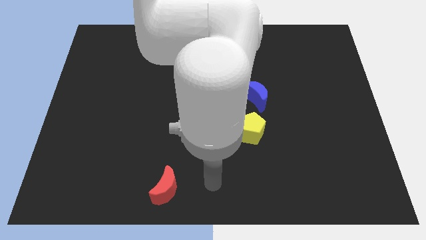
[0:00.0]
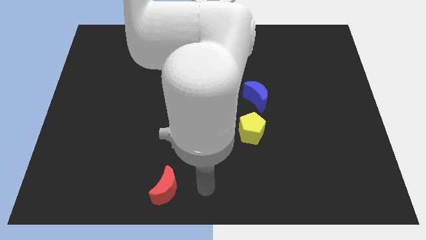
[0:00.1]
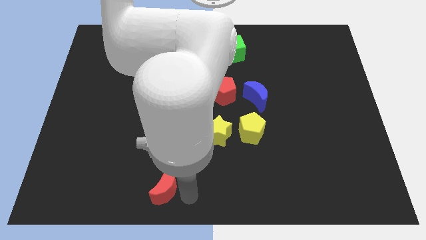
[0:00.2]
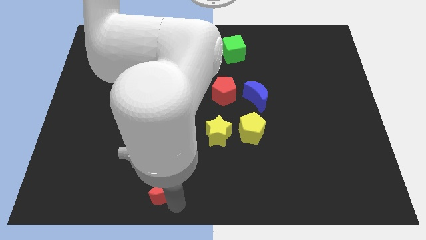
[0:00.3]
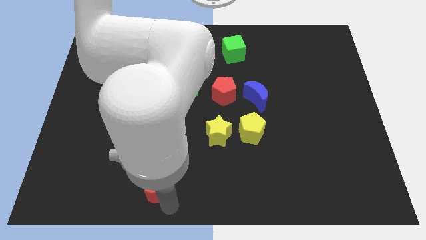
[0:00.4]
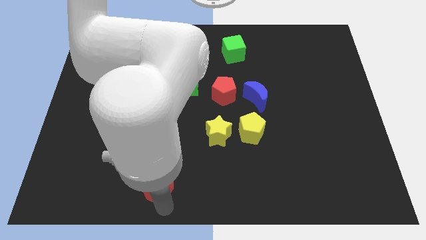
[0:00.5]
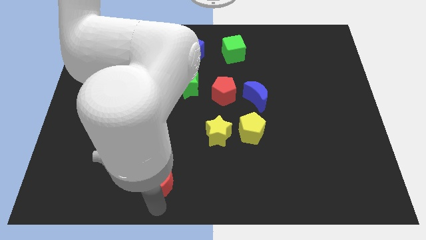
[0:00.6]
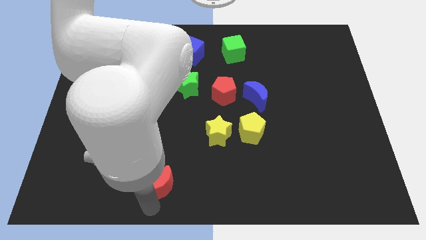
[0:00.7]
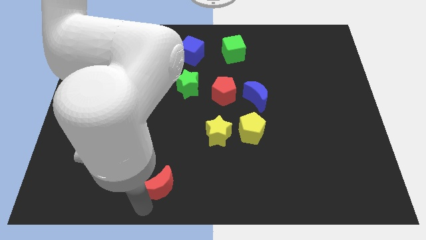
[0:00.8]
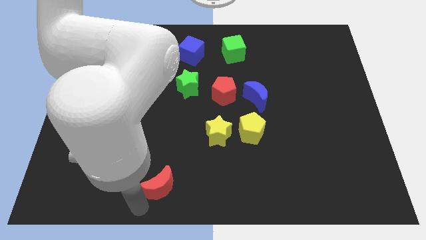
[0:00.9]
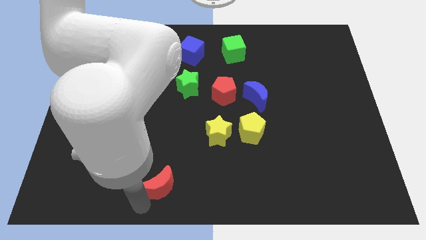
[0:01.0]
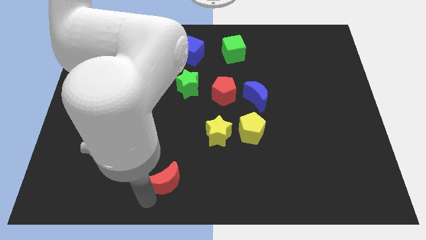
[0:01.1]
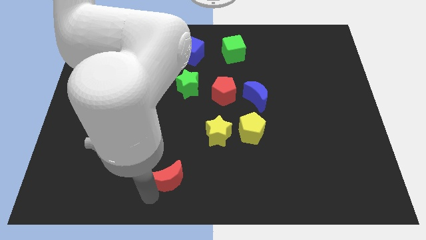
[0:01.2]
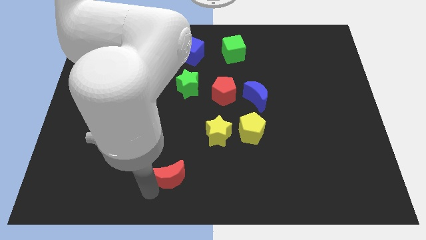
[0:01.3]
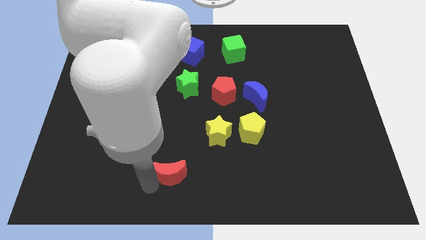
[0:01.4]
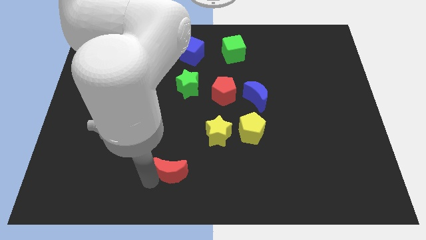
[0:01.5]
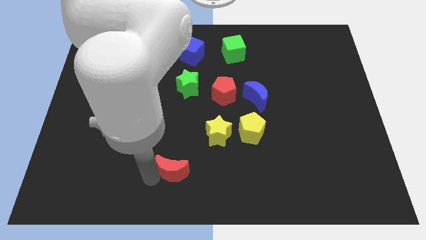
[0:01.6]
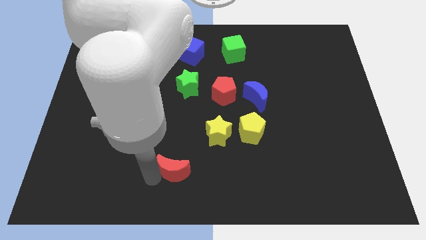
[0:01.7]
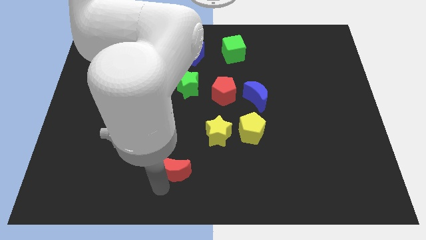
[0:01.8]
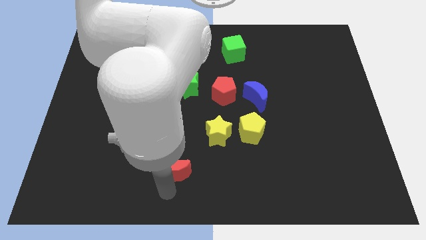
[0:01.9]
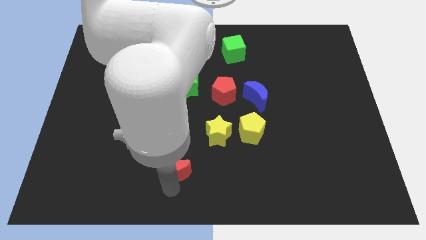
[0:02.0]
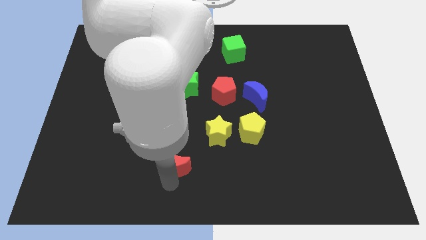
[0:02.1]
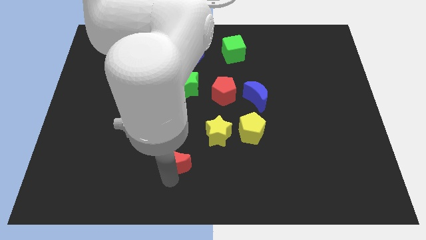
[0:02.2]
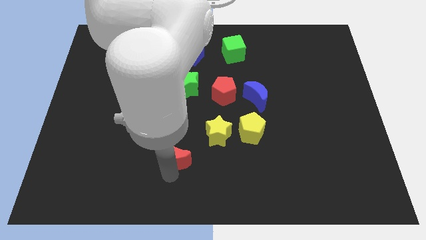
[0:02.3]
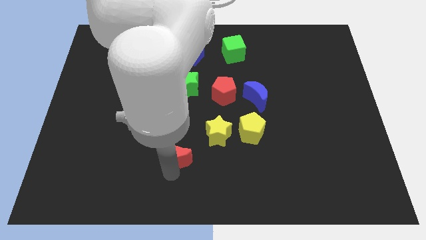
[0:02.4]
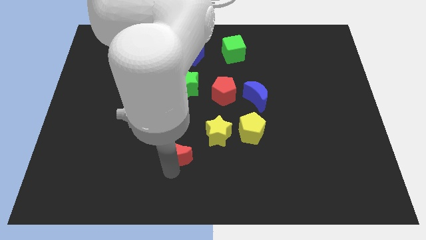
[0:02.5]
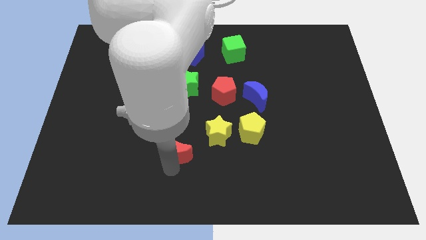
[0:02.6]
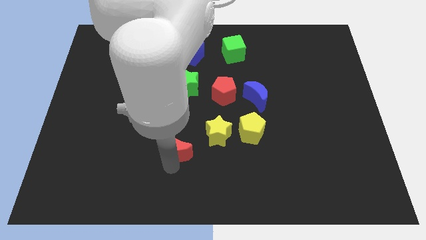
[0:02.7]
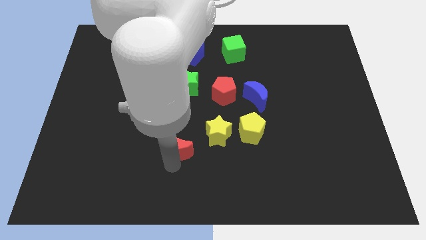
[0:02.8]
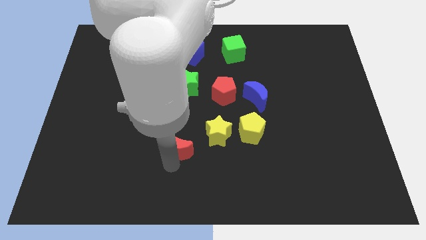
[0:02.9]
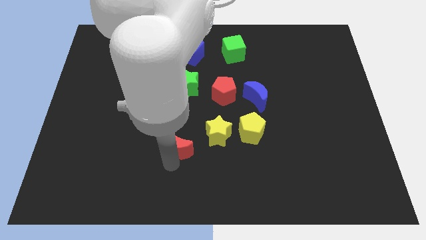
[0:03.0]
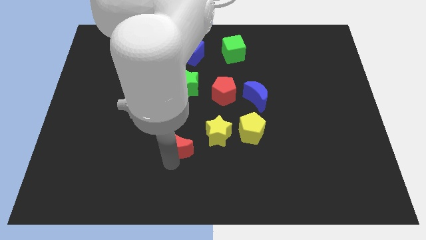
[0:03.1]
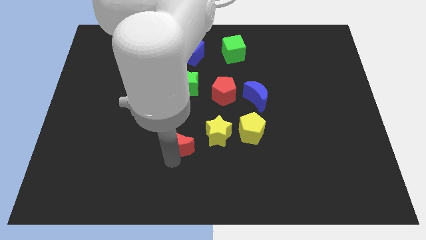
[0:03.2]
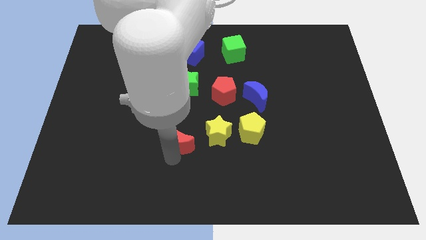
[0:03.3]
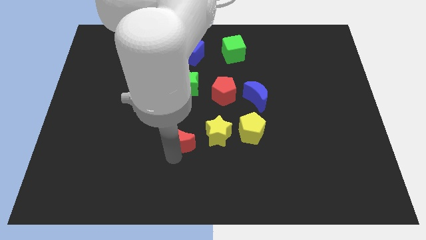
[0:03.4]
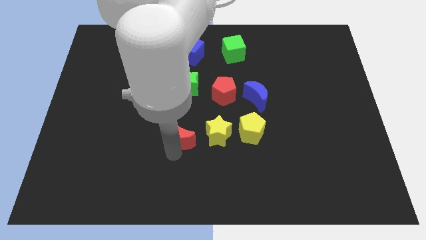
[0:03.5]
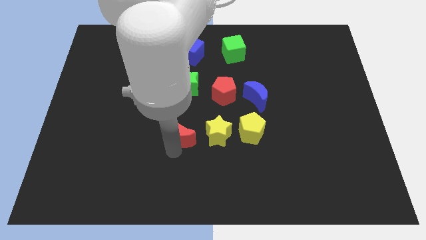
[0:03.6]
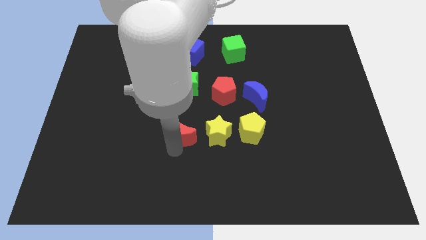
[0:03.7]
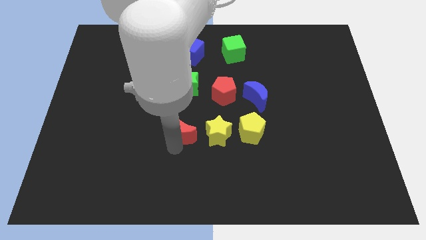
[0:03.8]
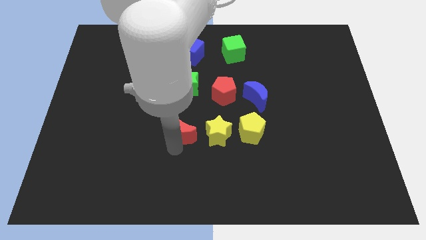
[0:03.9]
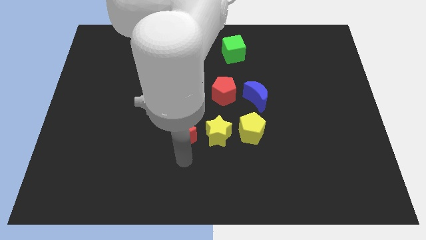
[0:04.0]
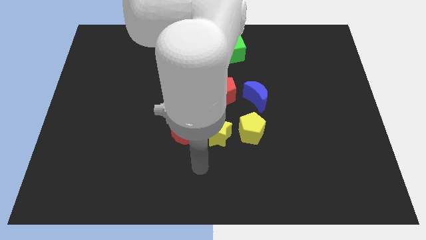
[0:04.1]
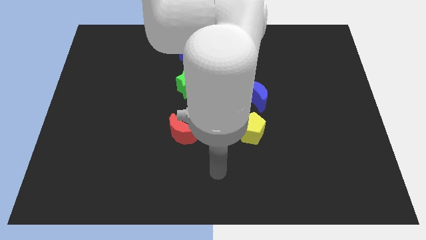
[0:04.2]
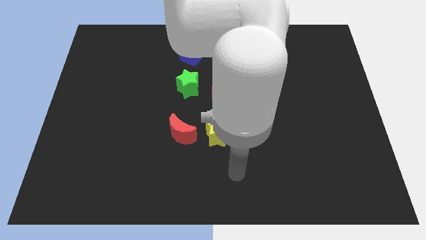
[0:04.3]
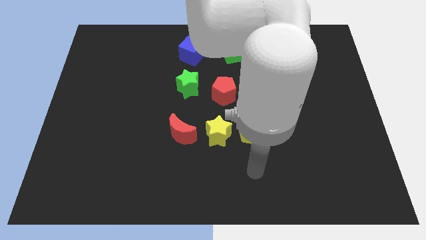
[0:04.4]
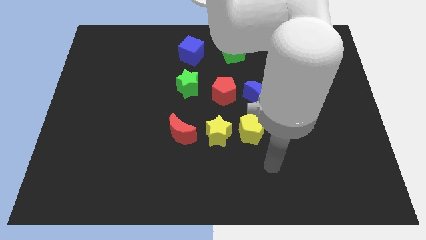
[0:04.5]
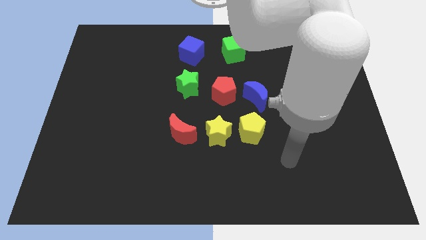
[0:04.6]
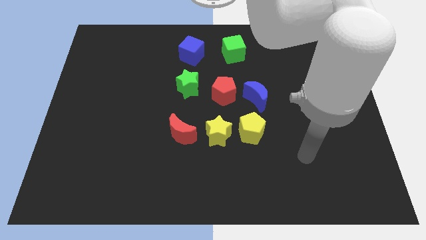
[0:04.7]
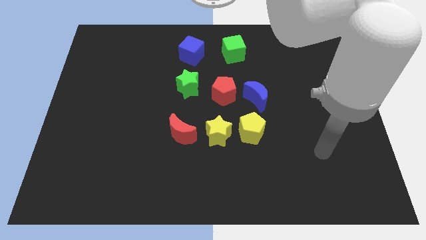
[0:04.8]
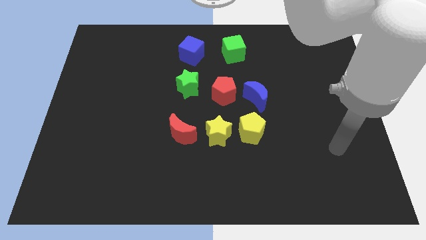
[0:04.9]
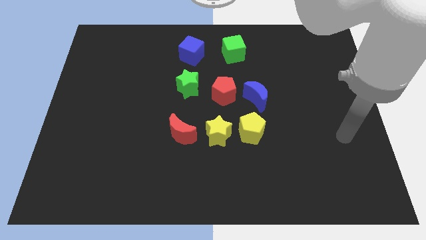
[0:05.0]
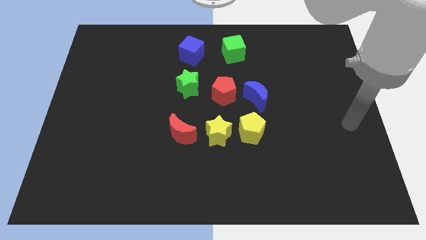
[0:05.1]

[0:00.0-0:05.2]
place the red moon to the left of the yellow star

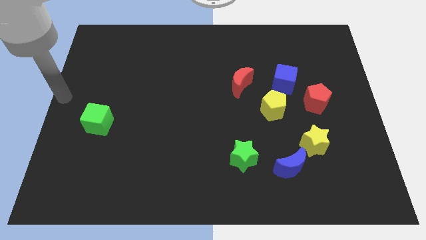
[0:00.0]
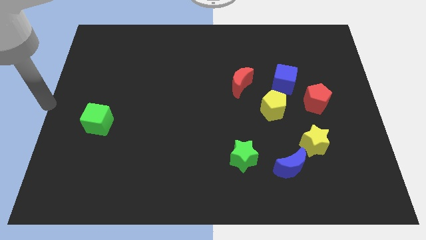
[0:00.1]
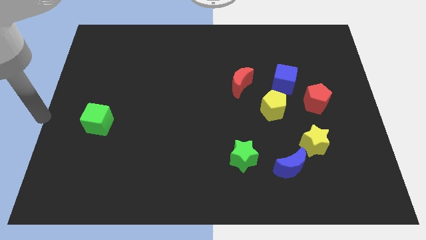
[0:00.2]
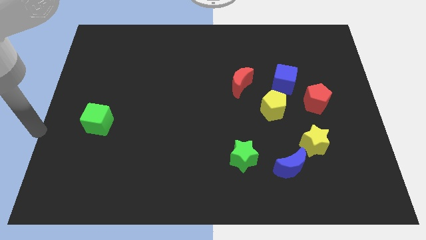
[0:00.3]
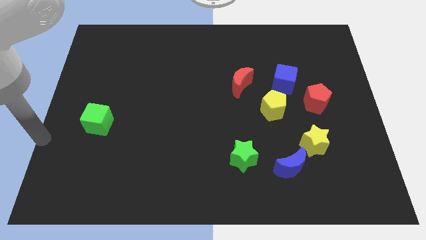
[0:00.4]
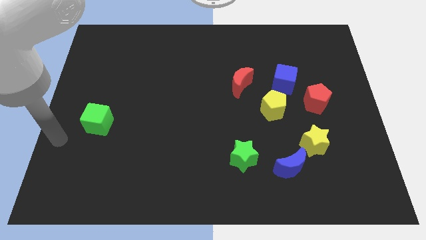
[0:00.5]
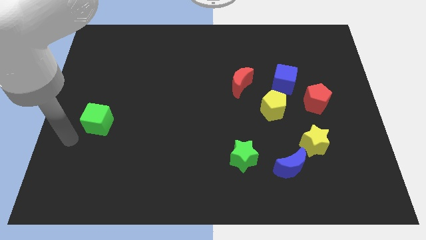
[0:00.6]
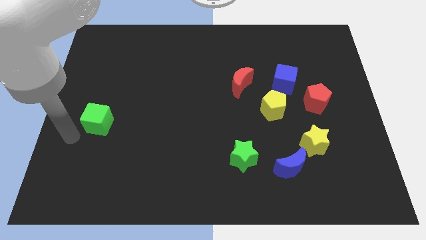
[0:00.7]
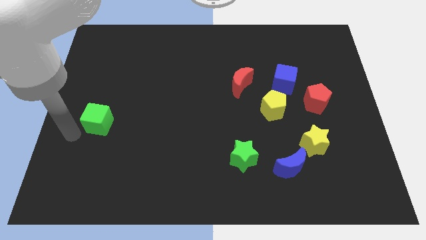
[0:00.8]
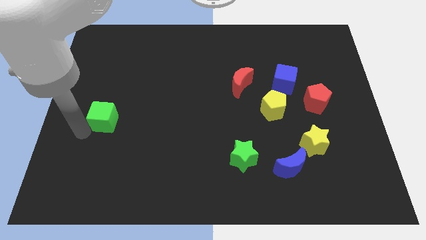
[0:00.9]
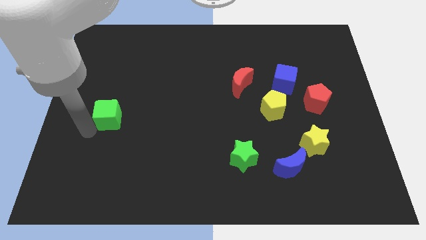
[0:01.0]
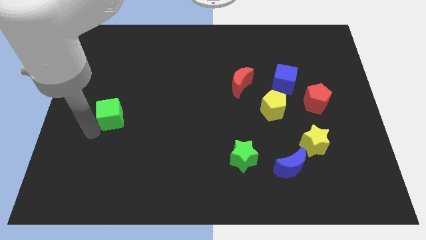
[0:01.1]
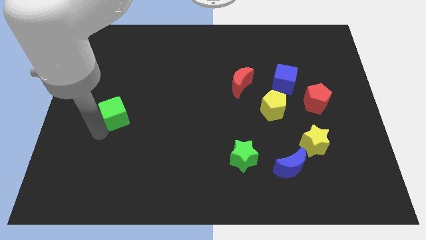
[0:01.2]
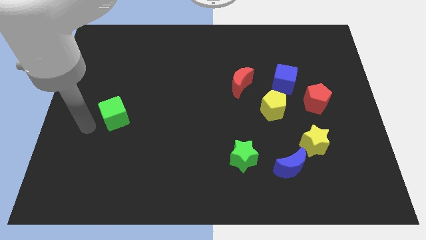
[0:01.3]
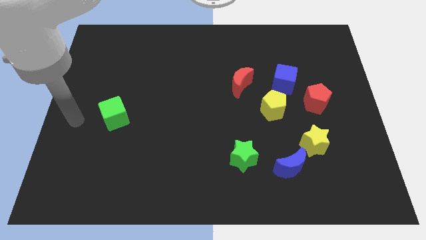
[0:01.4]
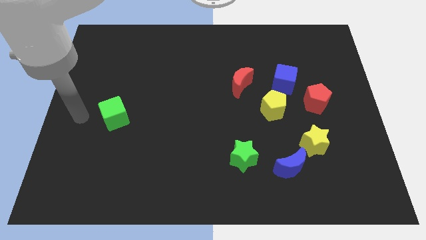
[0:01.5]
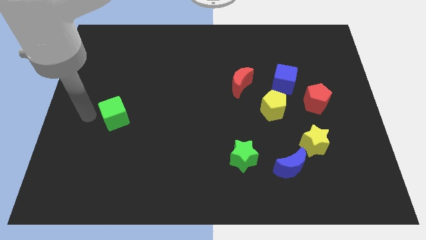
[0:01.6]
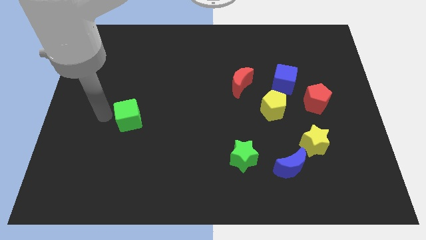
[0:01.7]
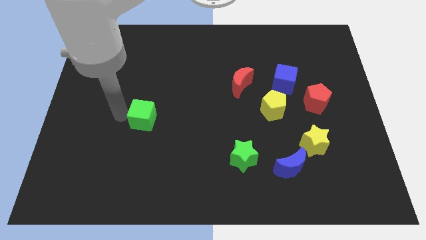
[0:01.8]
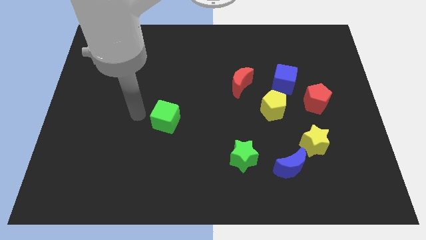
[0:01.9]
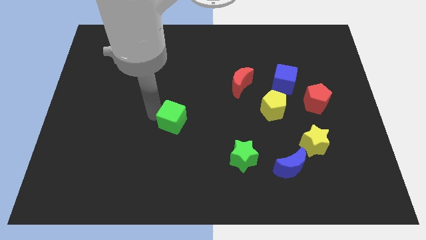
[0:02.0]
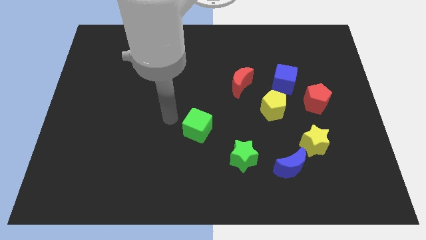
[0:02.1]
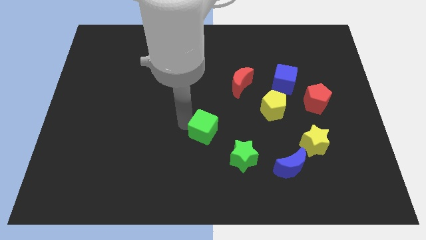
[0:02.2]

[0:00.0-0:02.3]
push the green cube towards the center

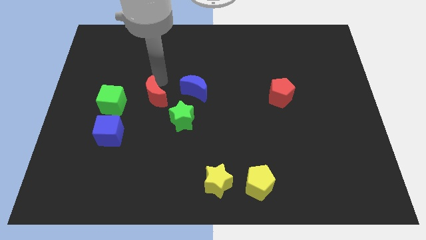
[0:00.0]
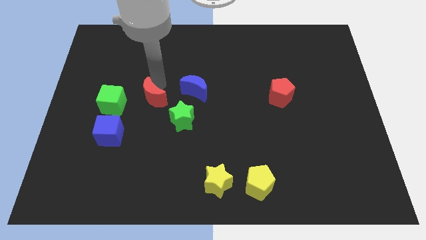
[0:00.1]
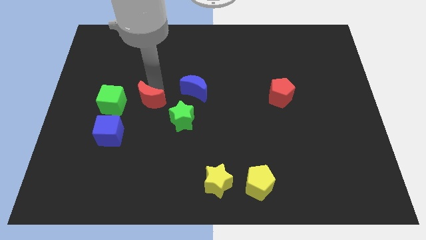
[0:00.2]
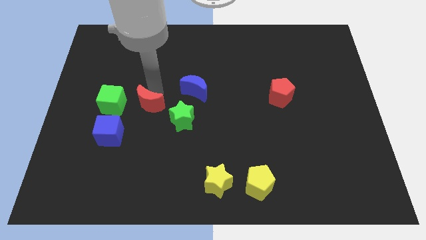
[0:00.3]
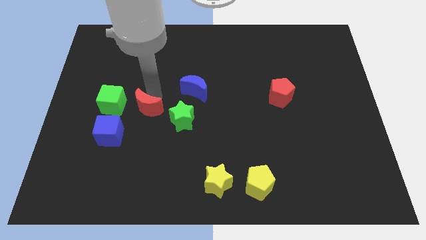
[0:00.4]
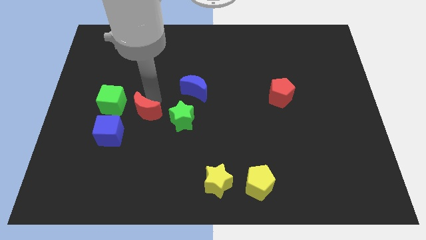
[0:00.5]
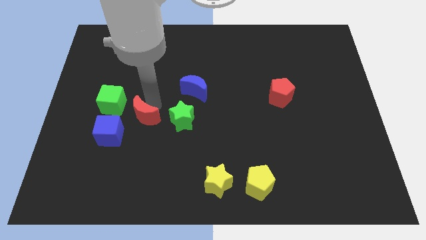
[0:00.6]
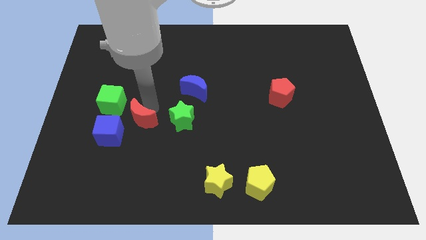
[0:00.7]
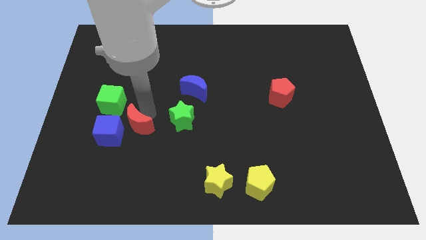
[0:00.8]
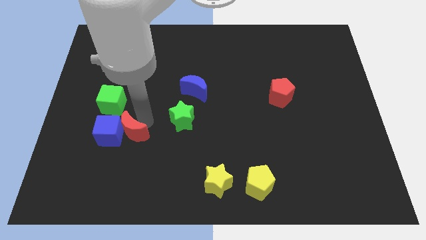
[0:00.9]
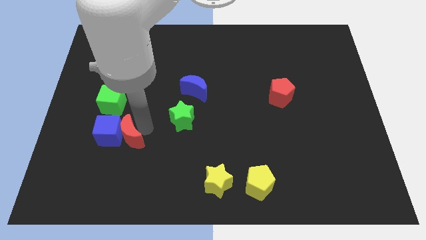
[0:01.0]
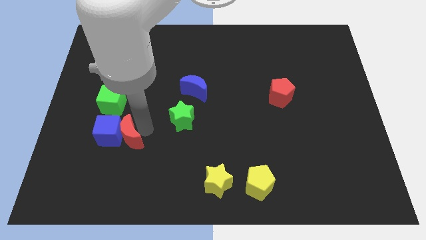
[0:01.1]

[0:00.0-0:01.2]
place the red crescent to the right of the blue cube

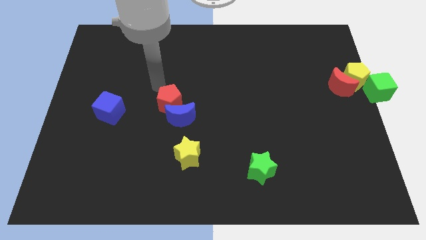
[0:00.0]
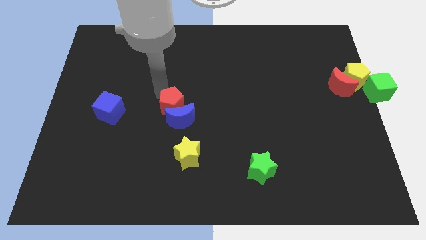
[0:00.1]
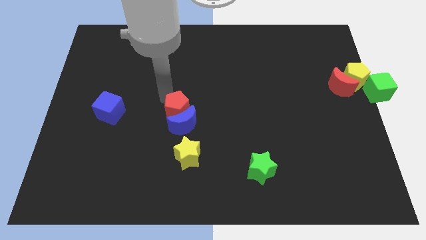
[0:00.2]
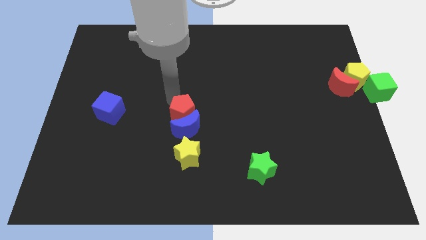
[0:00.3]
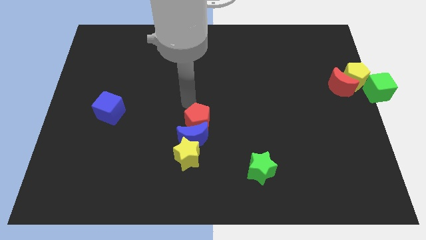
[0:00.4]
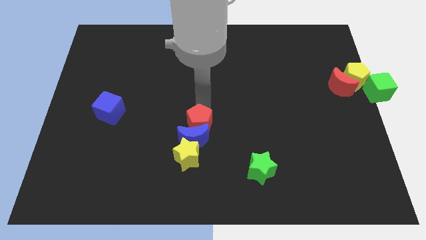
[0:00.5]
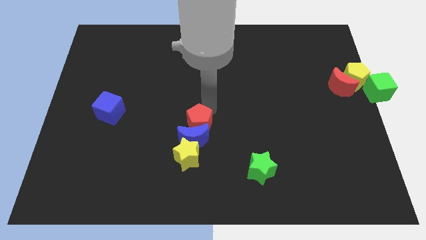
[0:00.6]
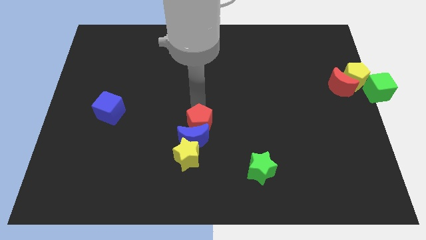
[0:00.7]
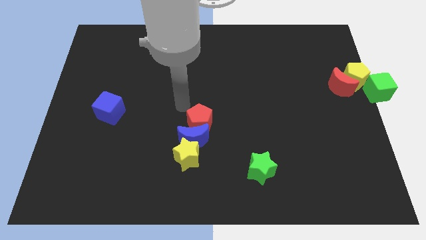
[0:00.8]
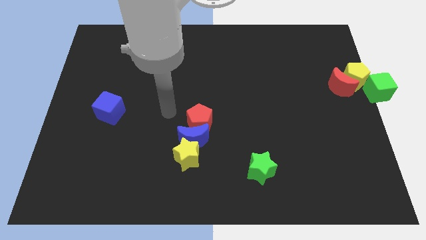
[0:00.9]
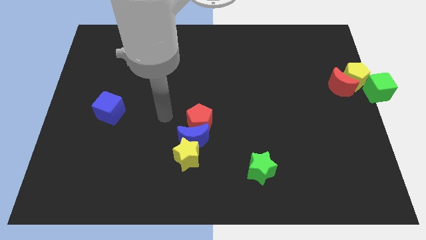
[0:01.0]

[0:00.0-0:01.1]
move red pentagon along with blue moon into yellow star
